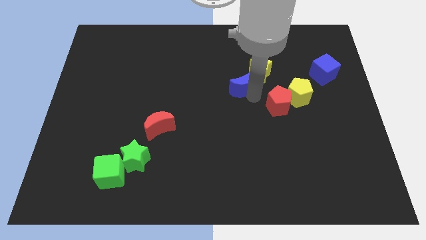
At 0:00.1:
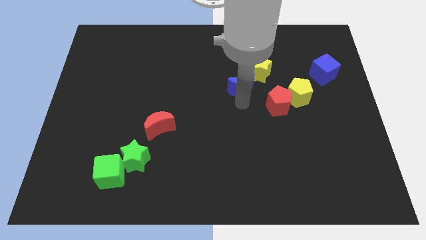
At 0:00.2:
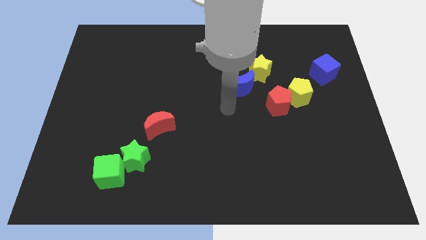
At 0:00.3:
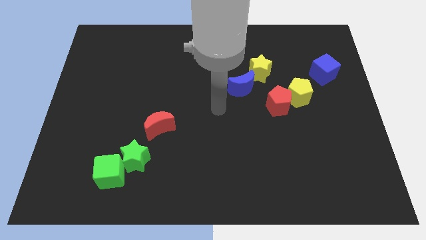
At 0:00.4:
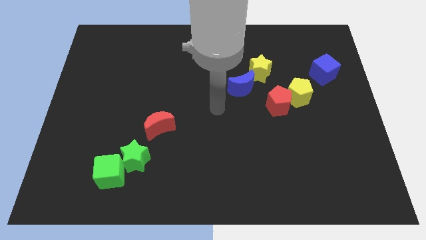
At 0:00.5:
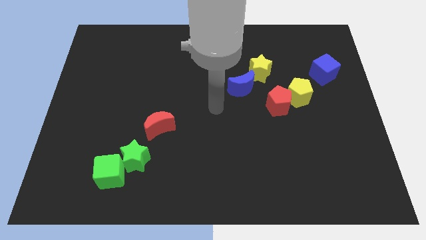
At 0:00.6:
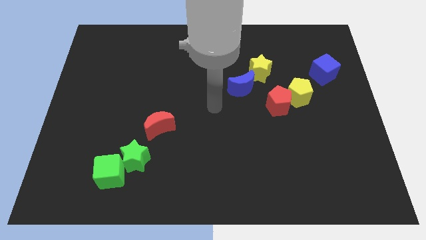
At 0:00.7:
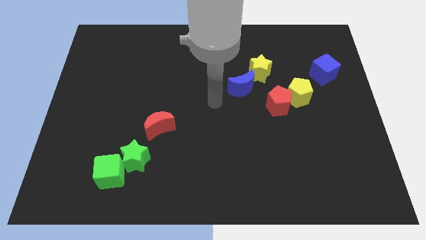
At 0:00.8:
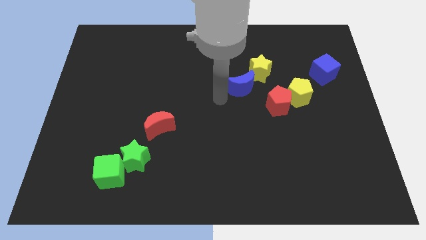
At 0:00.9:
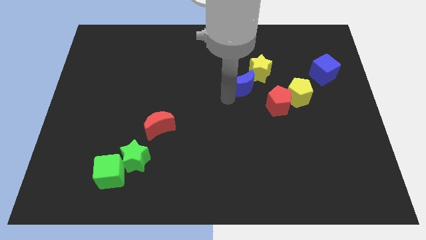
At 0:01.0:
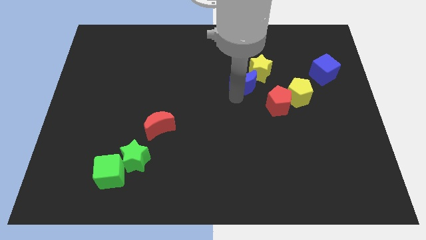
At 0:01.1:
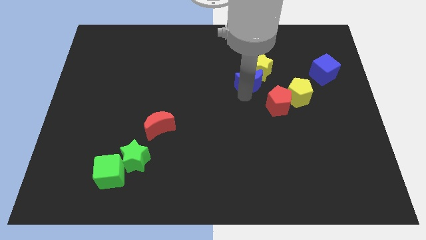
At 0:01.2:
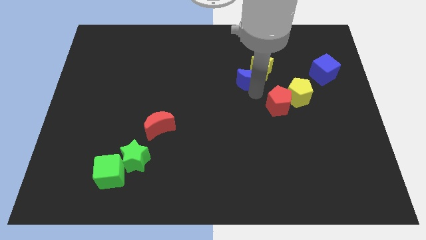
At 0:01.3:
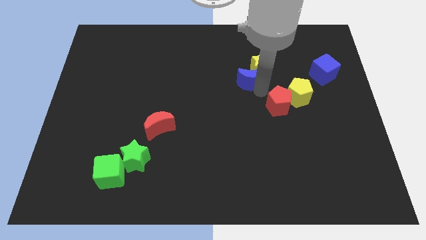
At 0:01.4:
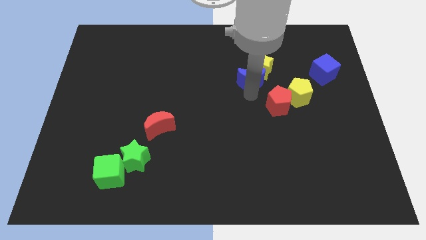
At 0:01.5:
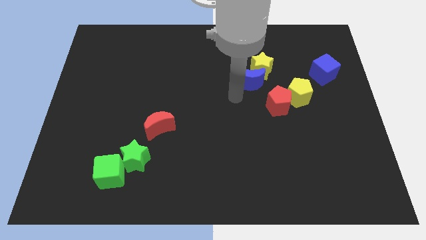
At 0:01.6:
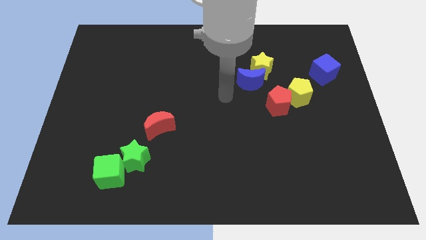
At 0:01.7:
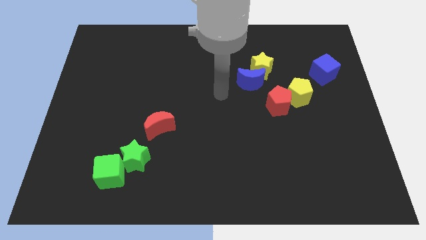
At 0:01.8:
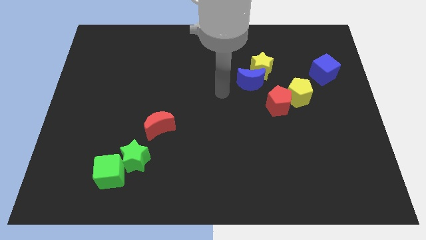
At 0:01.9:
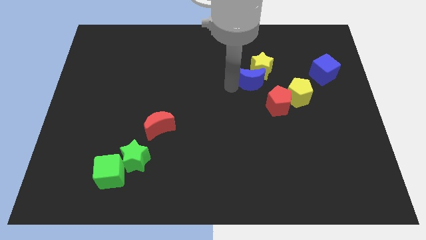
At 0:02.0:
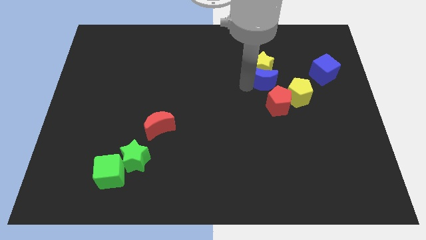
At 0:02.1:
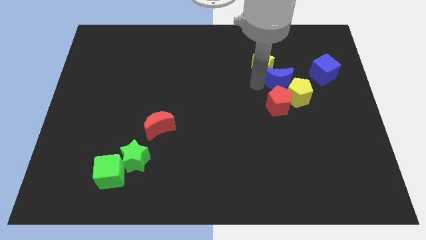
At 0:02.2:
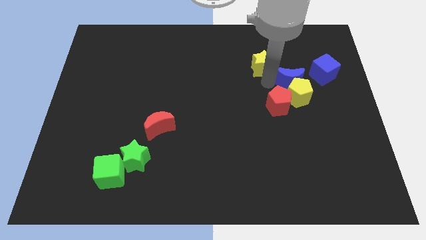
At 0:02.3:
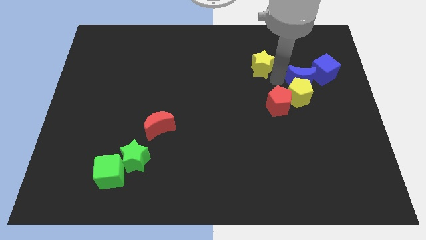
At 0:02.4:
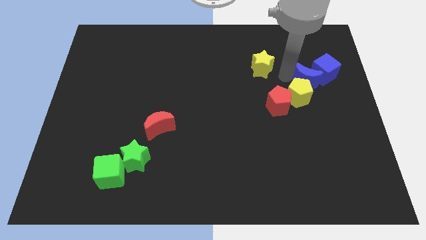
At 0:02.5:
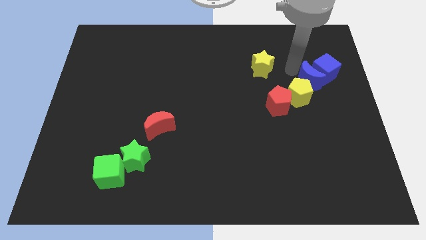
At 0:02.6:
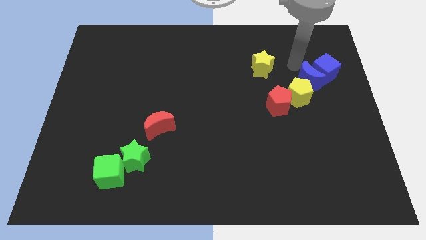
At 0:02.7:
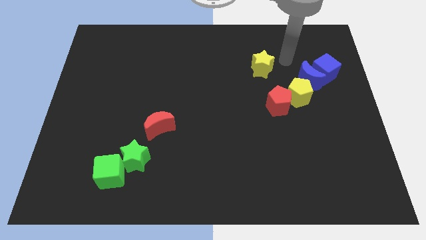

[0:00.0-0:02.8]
move the blue crescent to the top right of the yellow pentagon

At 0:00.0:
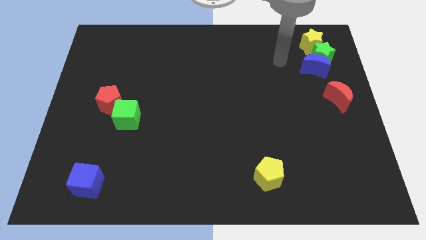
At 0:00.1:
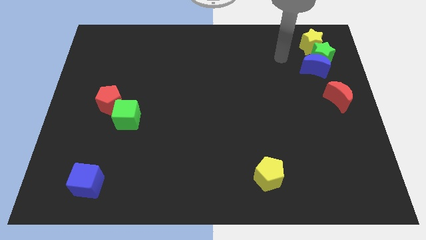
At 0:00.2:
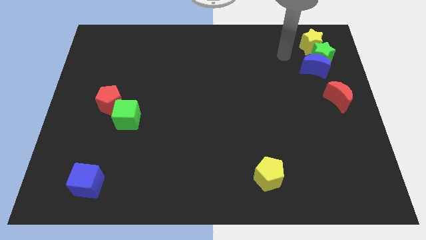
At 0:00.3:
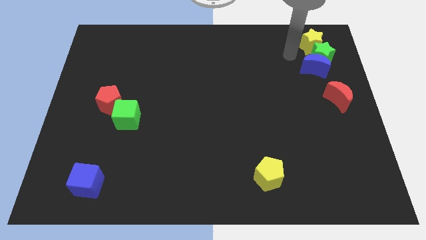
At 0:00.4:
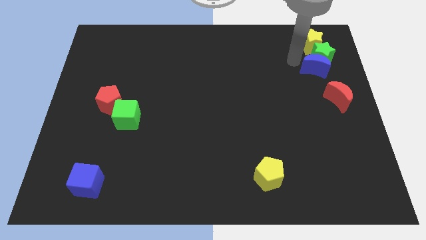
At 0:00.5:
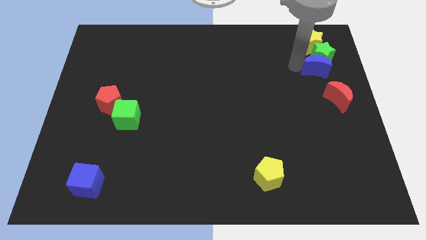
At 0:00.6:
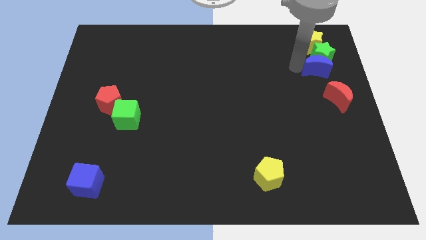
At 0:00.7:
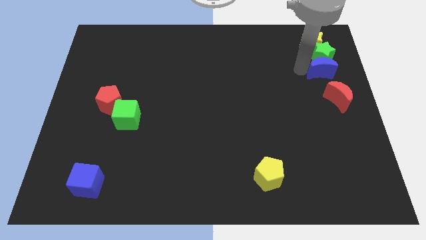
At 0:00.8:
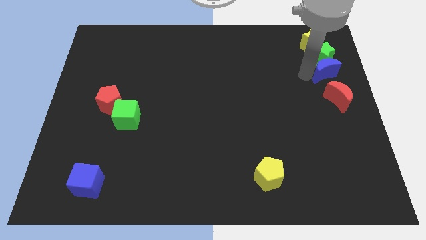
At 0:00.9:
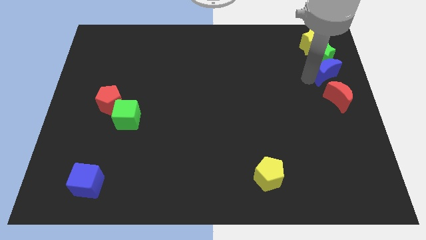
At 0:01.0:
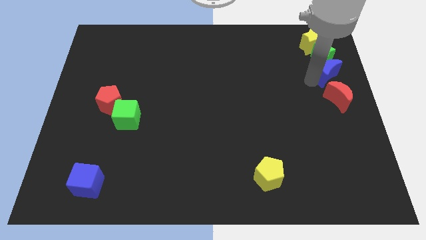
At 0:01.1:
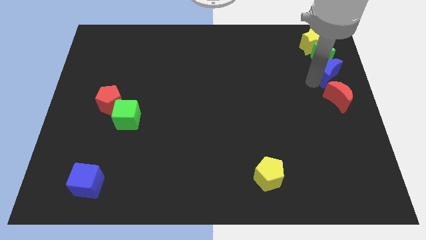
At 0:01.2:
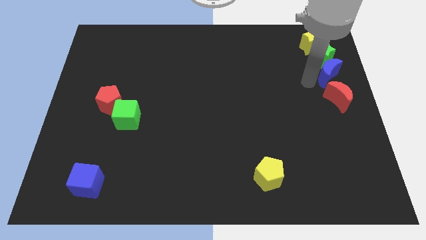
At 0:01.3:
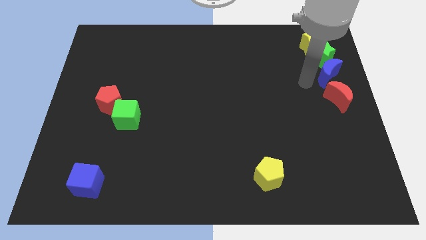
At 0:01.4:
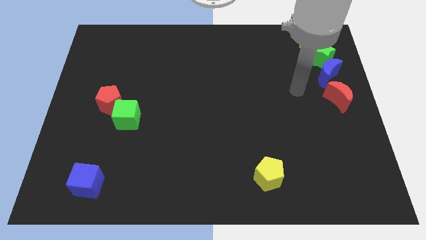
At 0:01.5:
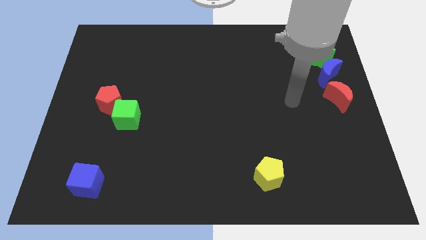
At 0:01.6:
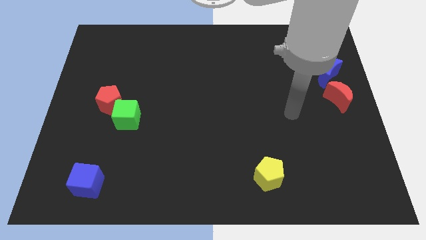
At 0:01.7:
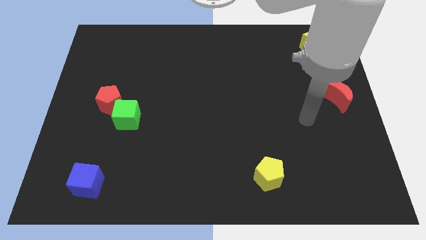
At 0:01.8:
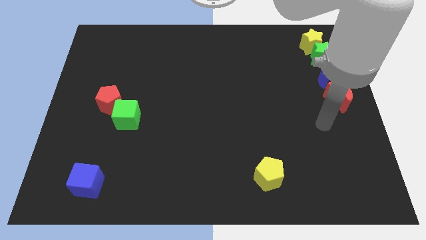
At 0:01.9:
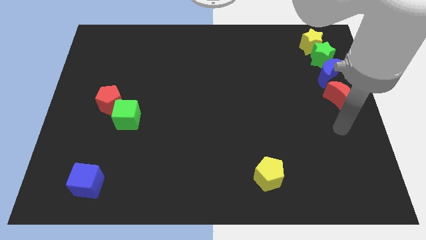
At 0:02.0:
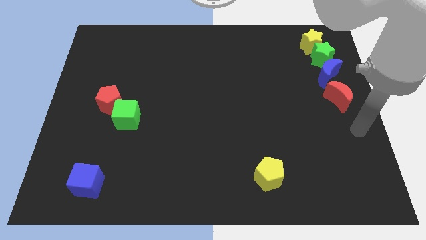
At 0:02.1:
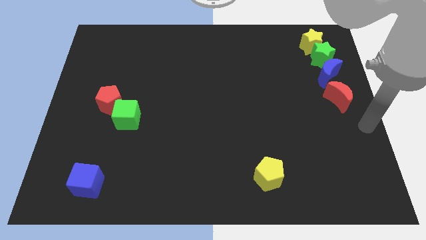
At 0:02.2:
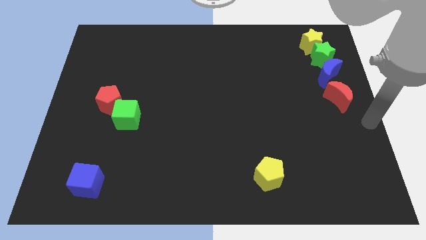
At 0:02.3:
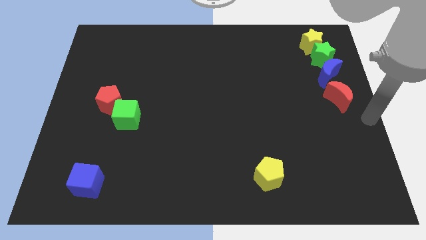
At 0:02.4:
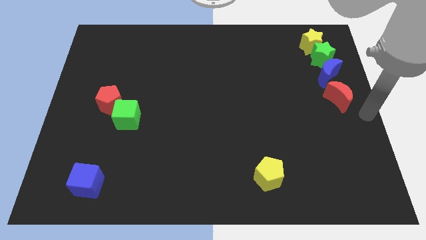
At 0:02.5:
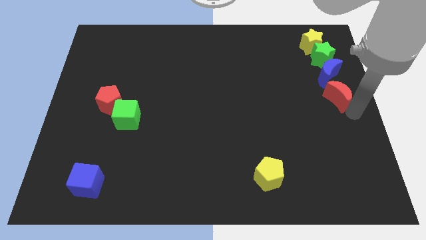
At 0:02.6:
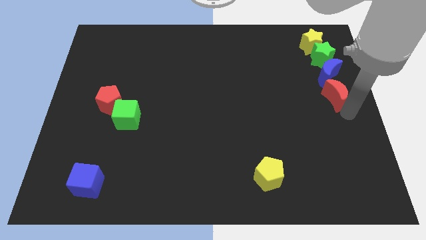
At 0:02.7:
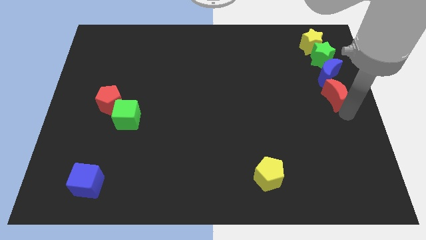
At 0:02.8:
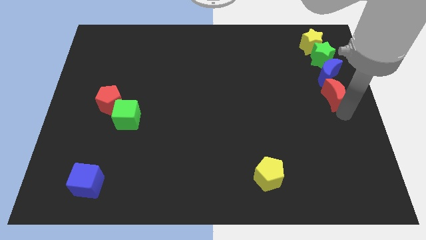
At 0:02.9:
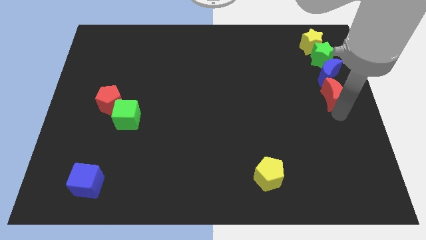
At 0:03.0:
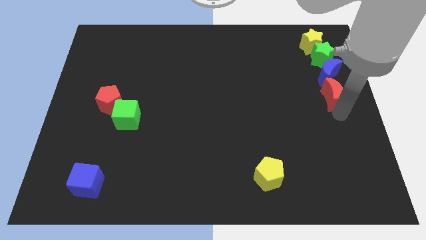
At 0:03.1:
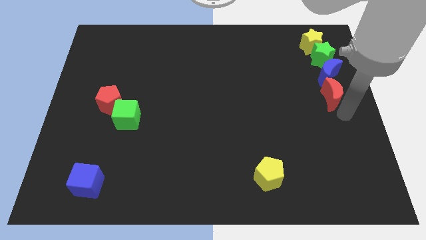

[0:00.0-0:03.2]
place the blue moon above the red moon

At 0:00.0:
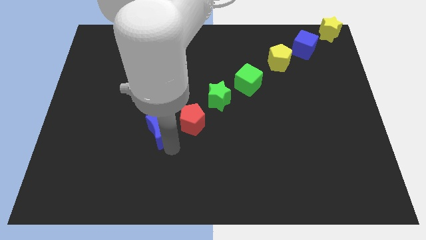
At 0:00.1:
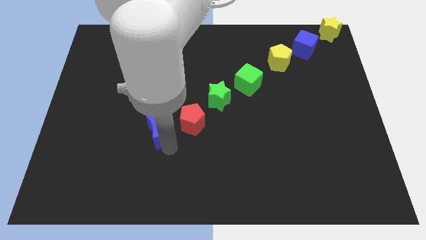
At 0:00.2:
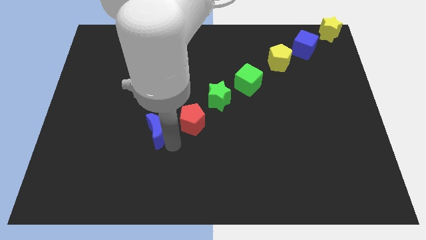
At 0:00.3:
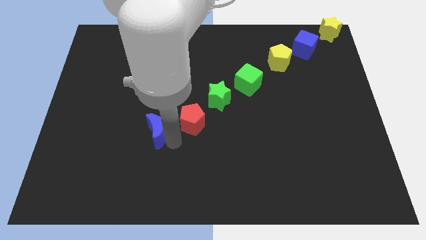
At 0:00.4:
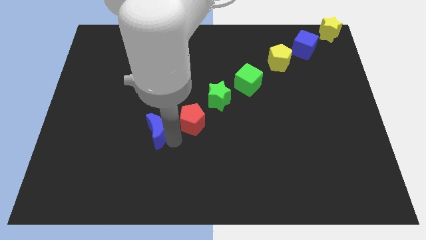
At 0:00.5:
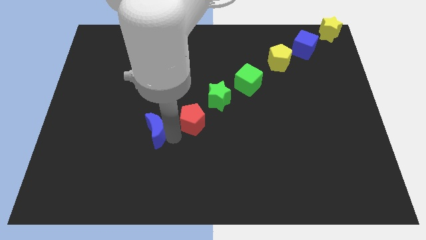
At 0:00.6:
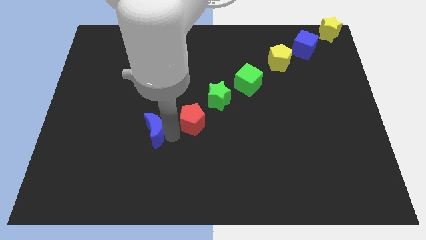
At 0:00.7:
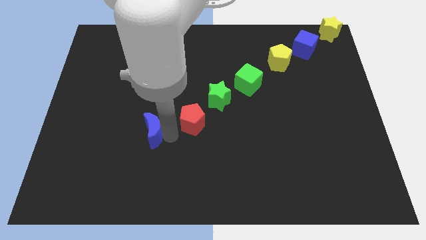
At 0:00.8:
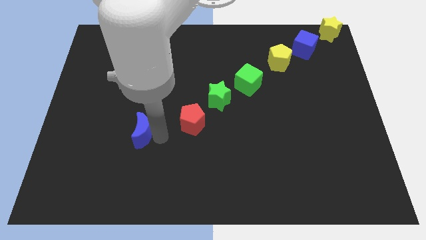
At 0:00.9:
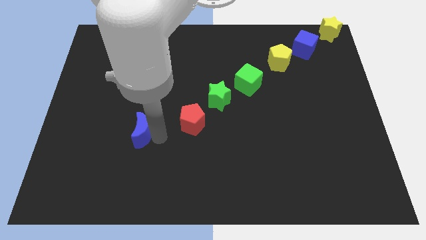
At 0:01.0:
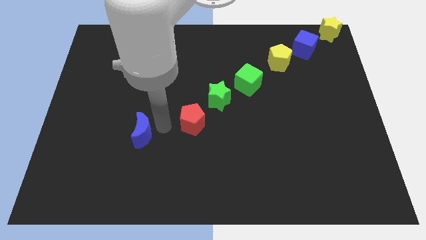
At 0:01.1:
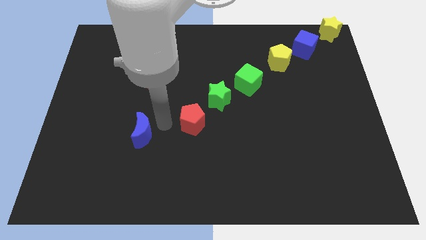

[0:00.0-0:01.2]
move blue moon away from the red pentagon

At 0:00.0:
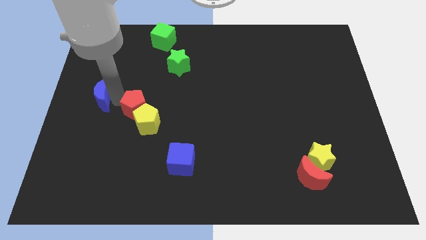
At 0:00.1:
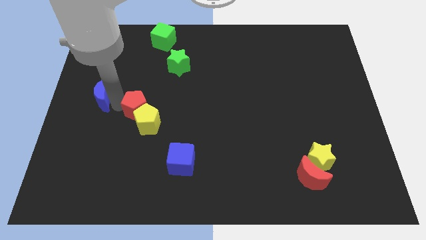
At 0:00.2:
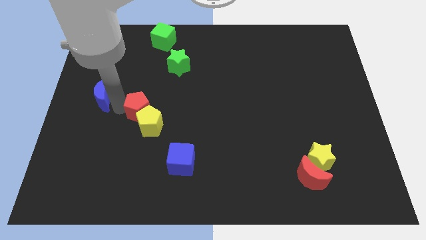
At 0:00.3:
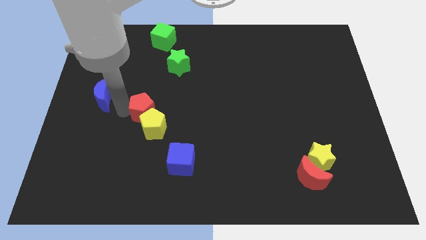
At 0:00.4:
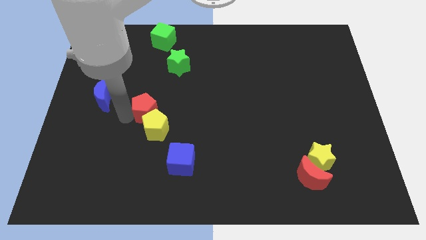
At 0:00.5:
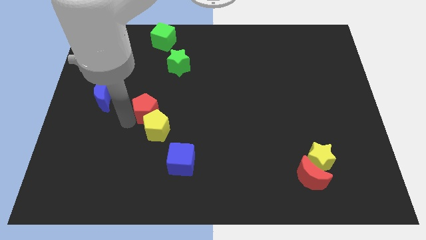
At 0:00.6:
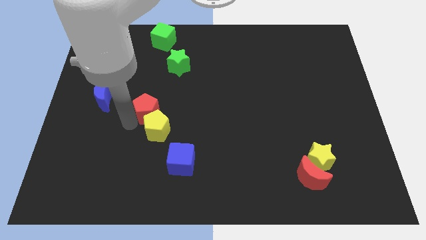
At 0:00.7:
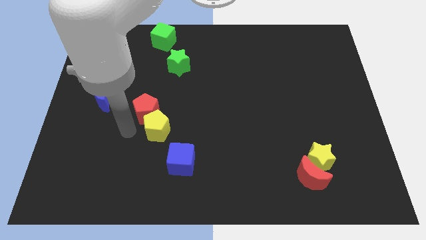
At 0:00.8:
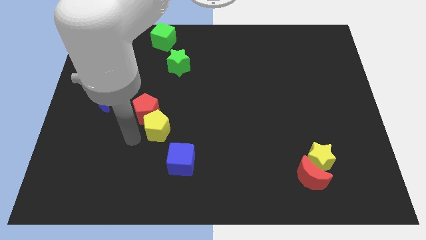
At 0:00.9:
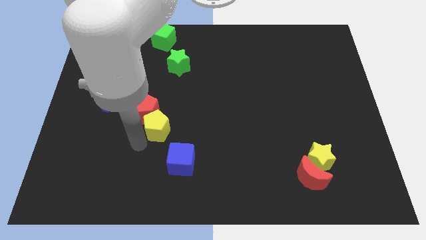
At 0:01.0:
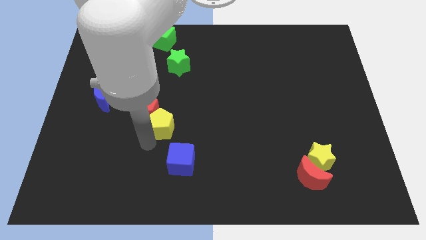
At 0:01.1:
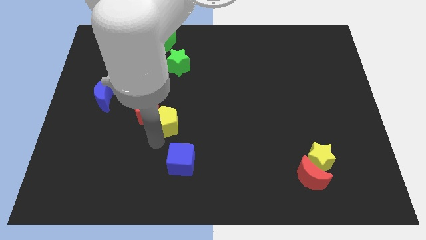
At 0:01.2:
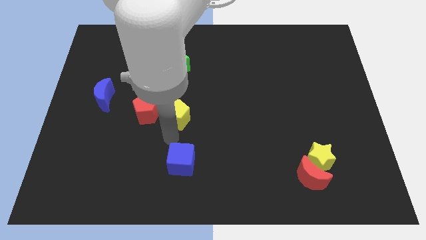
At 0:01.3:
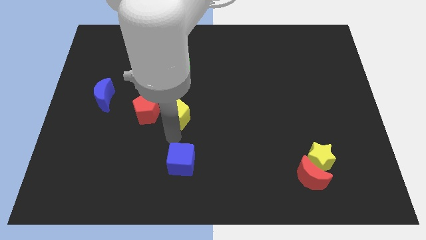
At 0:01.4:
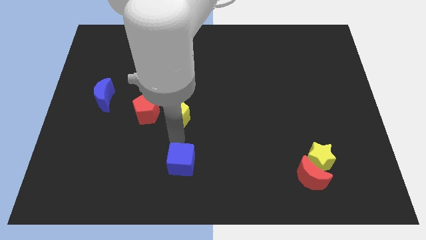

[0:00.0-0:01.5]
push the yellow pentagon to the right side of the red pentagon

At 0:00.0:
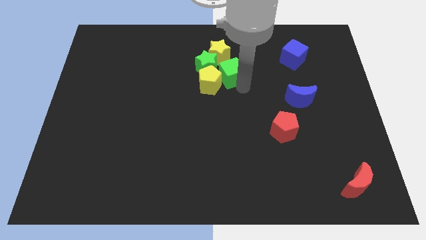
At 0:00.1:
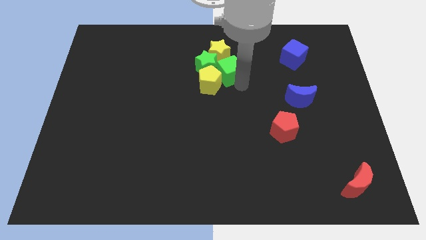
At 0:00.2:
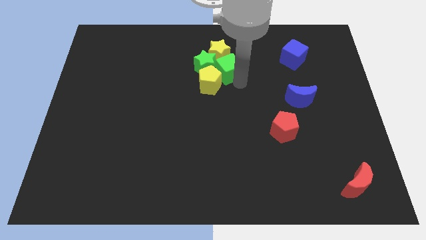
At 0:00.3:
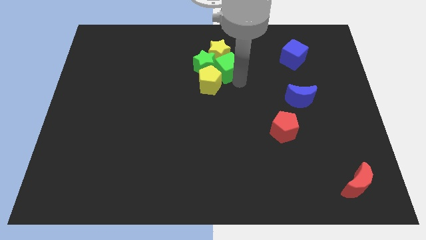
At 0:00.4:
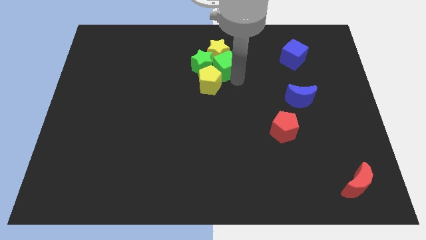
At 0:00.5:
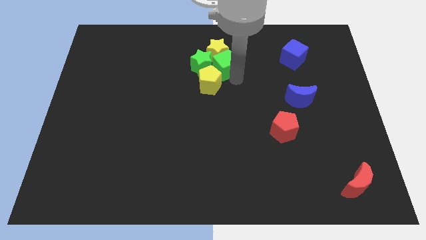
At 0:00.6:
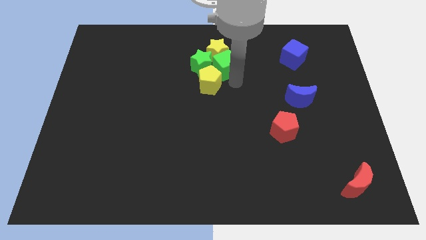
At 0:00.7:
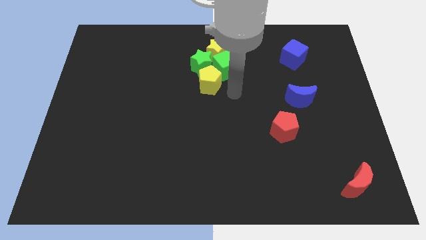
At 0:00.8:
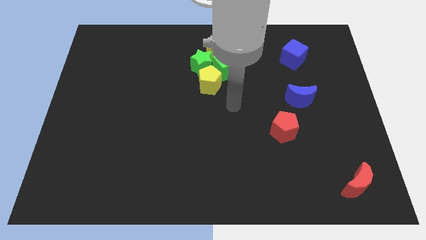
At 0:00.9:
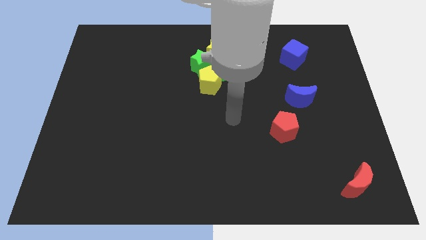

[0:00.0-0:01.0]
push the green cube into the green star
